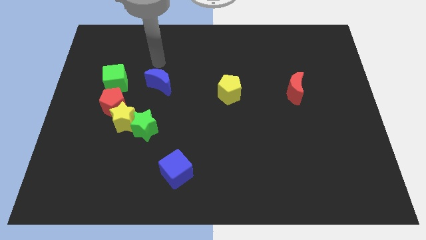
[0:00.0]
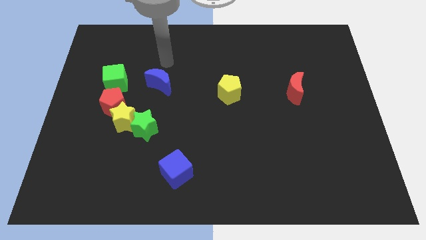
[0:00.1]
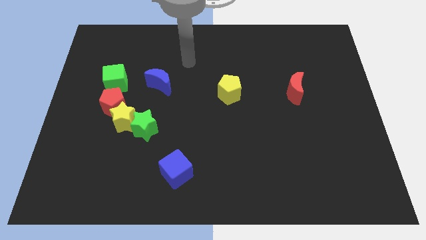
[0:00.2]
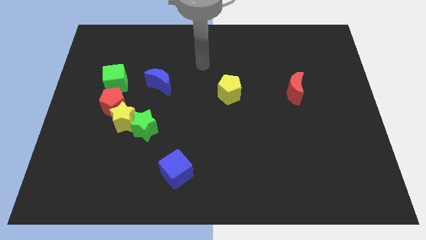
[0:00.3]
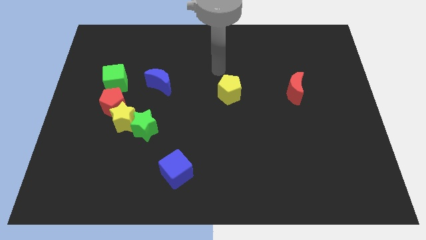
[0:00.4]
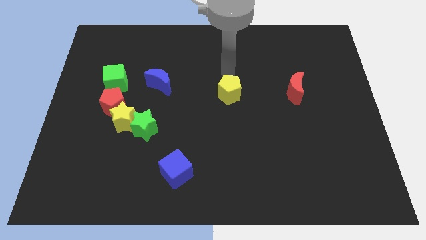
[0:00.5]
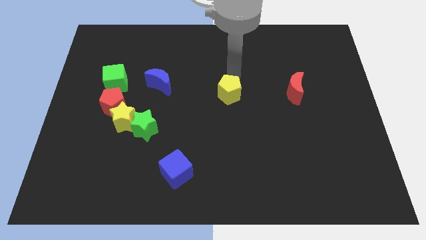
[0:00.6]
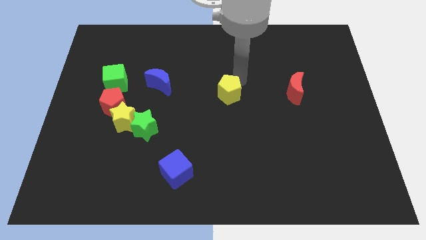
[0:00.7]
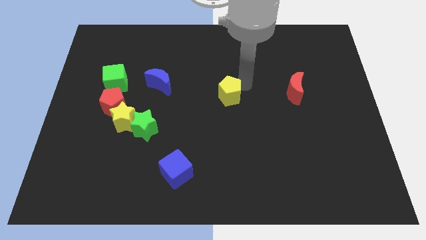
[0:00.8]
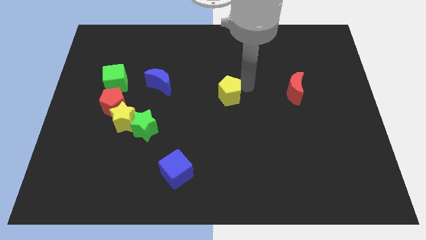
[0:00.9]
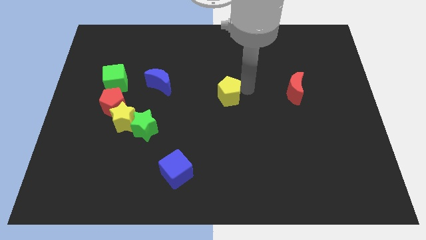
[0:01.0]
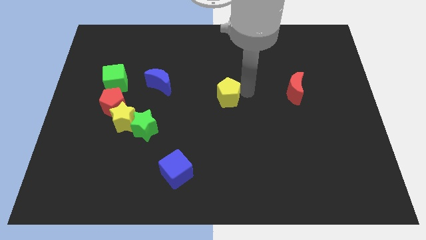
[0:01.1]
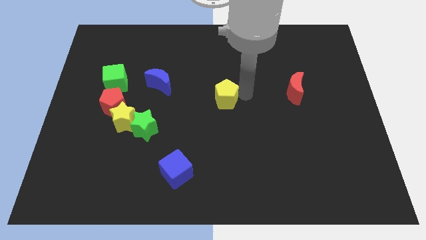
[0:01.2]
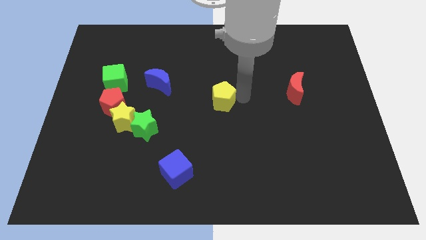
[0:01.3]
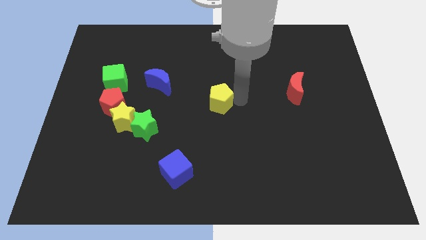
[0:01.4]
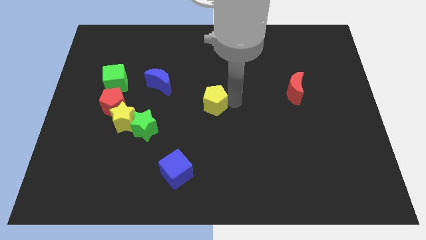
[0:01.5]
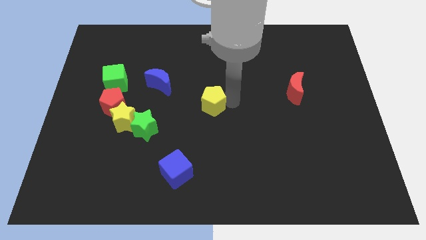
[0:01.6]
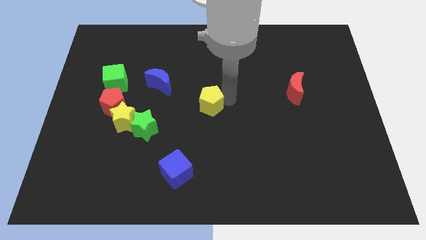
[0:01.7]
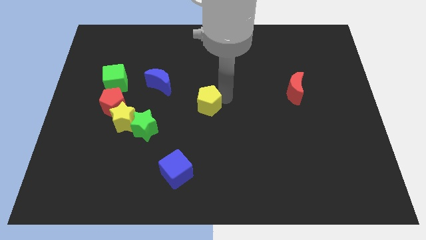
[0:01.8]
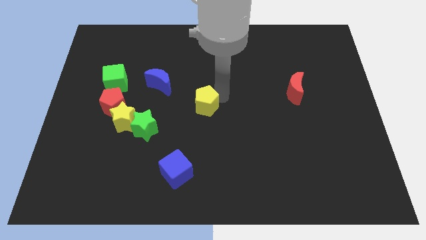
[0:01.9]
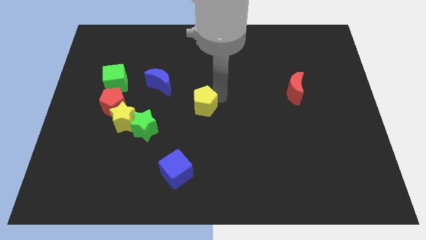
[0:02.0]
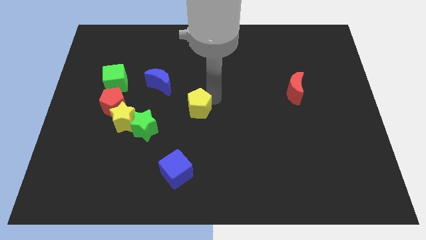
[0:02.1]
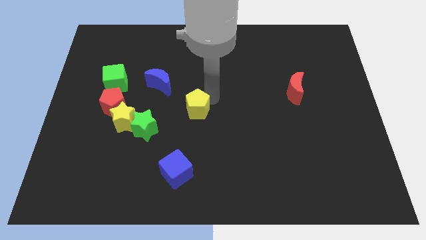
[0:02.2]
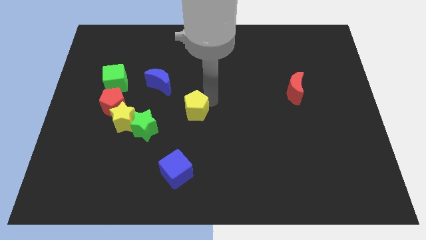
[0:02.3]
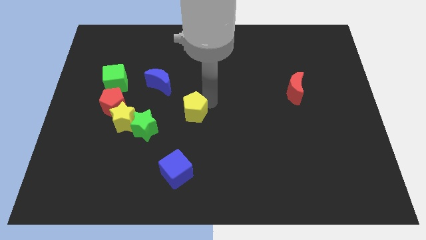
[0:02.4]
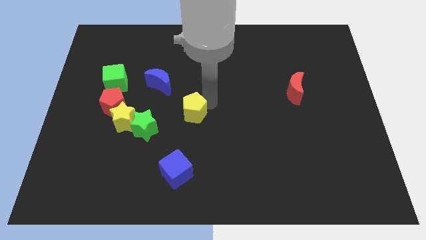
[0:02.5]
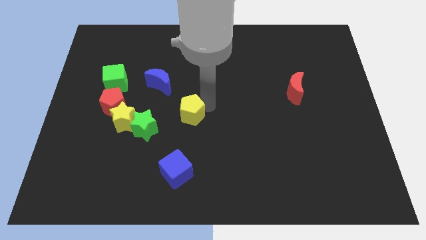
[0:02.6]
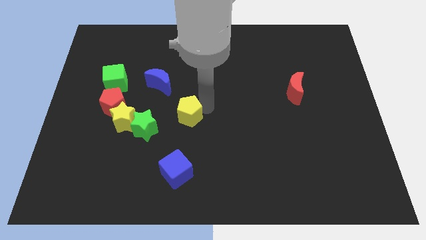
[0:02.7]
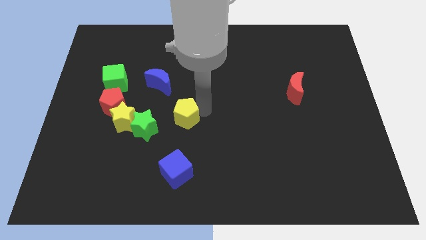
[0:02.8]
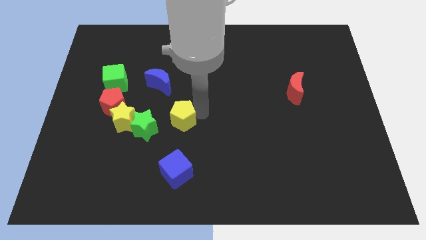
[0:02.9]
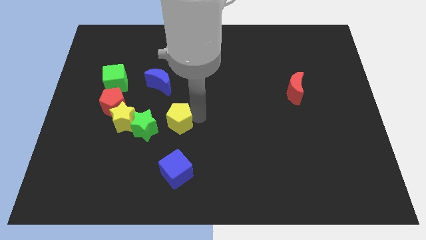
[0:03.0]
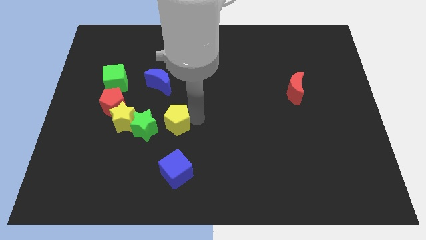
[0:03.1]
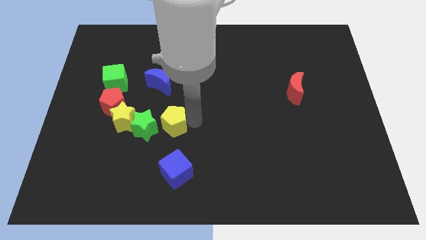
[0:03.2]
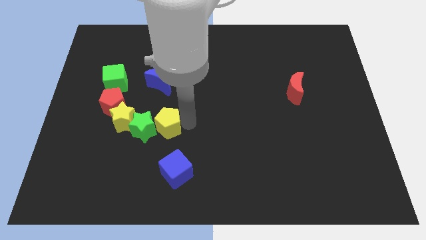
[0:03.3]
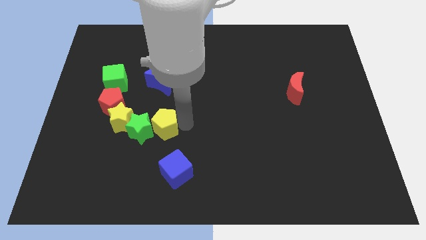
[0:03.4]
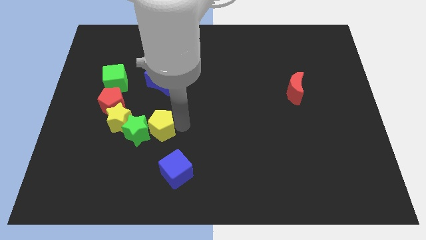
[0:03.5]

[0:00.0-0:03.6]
push the yellow pentagon close to the green star

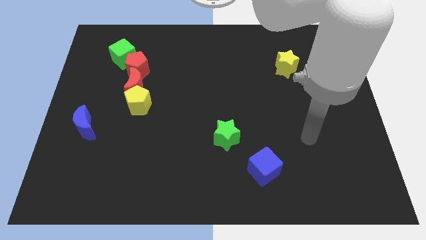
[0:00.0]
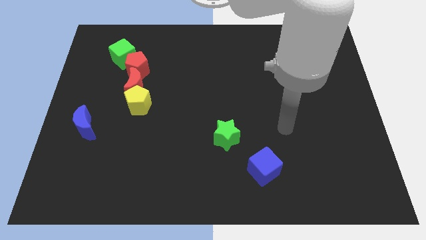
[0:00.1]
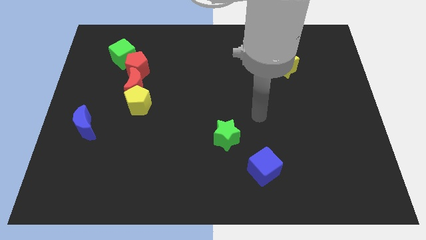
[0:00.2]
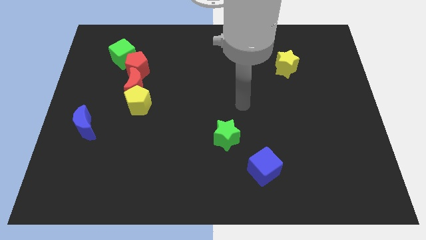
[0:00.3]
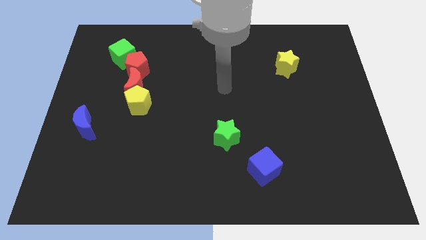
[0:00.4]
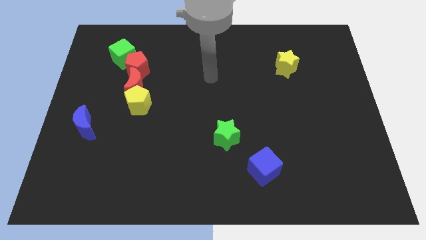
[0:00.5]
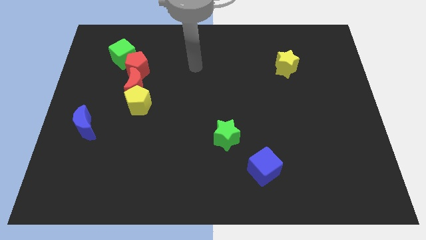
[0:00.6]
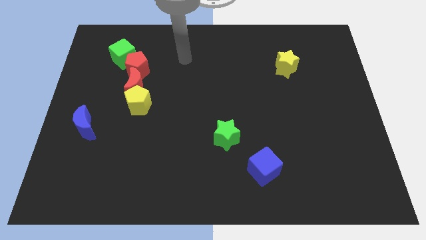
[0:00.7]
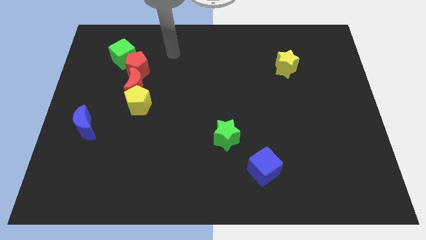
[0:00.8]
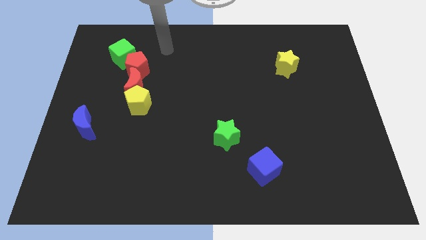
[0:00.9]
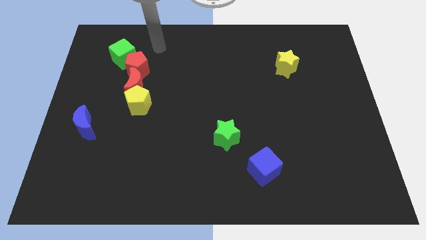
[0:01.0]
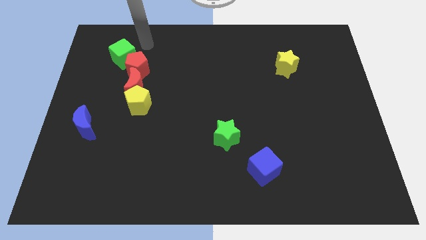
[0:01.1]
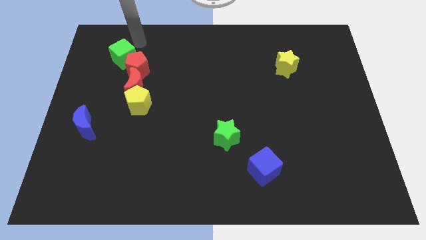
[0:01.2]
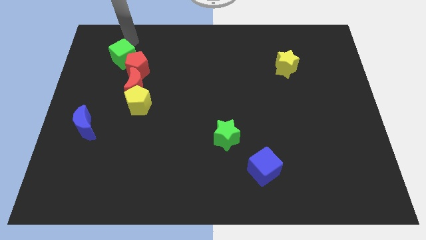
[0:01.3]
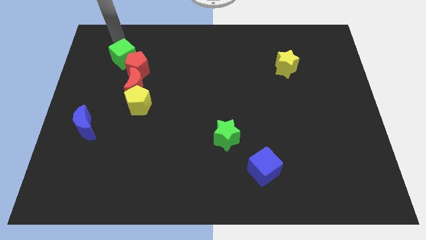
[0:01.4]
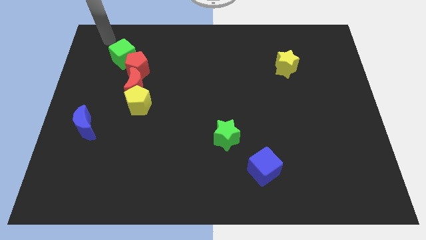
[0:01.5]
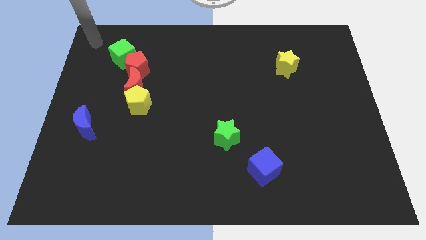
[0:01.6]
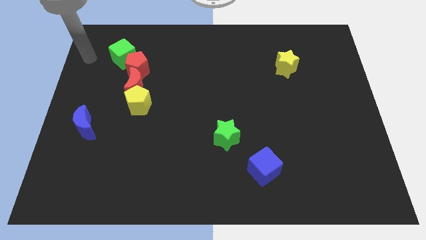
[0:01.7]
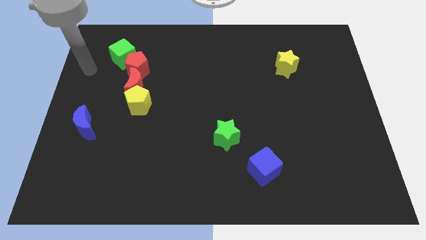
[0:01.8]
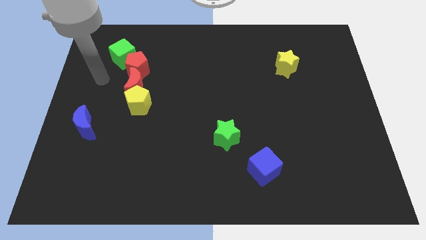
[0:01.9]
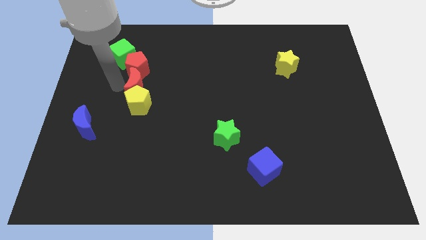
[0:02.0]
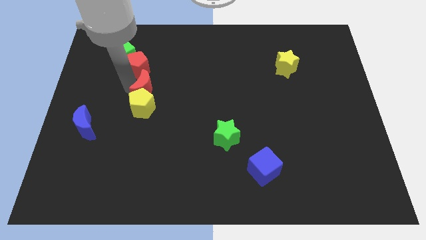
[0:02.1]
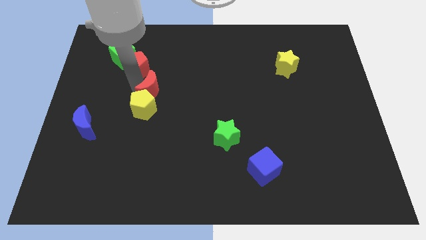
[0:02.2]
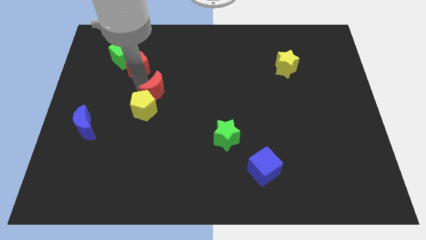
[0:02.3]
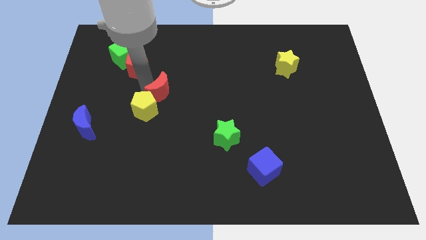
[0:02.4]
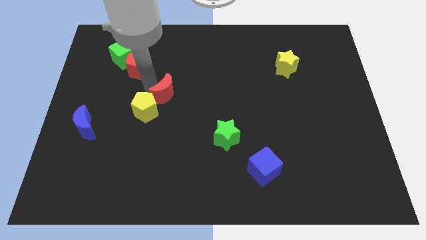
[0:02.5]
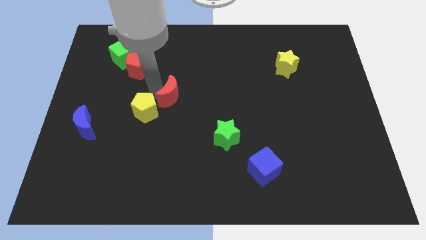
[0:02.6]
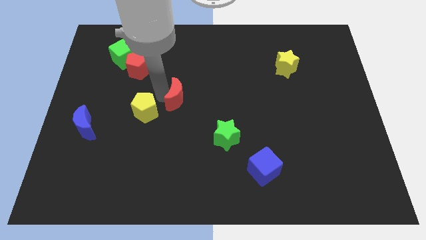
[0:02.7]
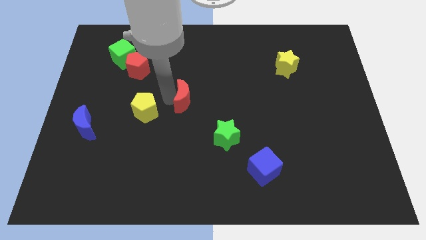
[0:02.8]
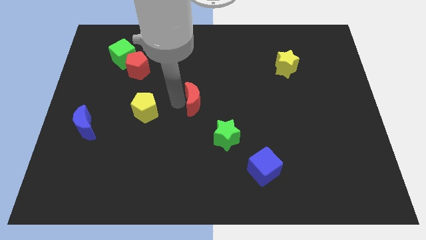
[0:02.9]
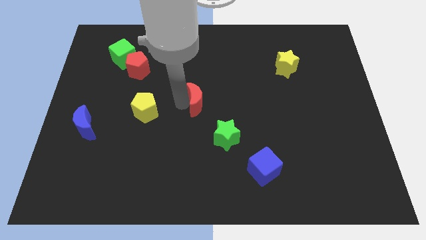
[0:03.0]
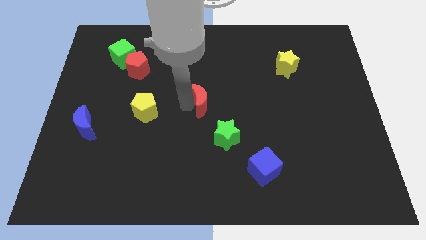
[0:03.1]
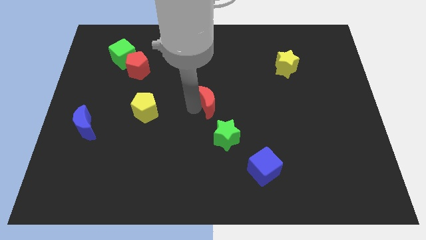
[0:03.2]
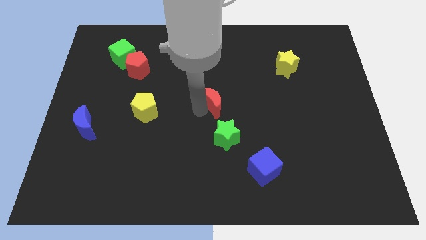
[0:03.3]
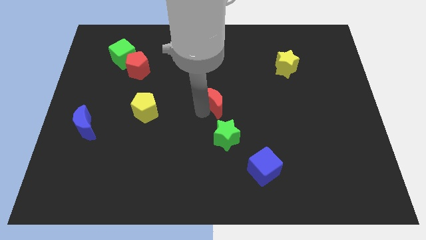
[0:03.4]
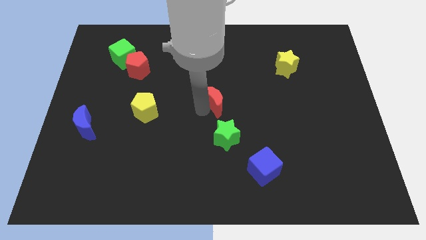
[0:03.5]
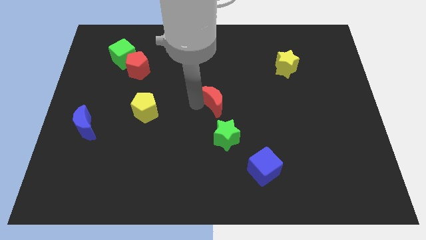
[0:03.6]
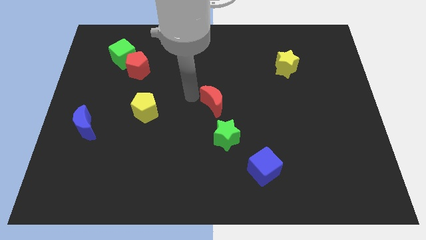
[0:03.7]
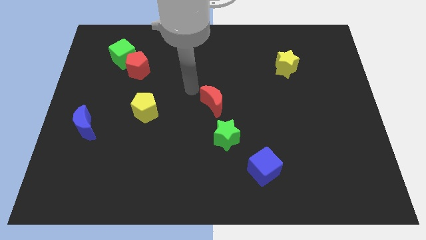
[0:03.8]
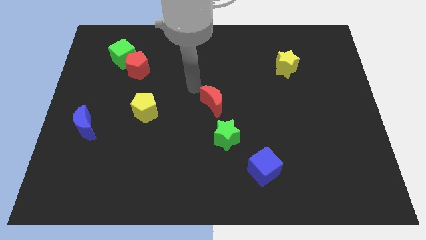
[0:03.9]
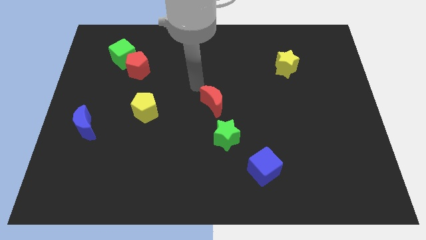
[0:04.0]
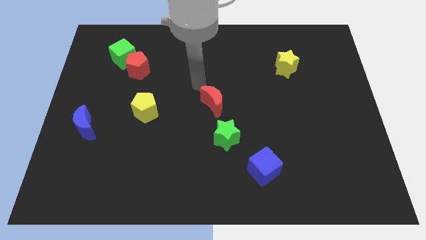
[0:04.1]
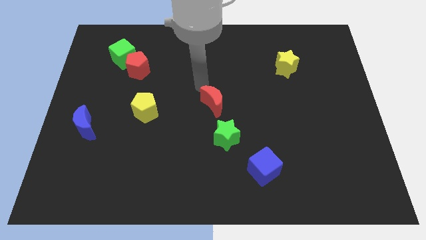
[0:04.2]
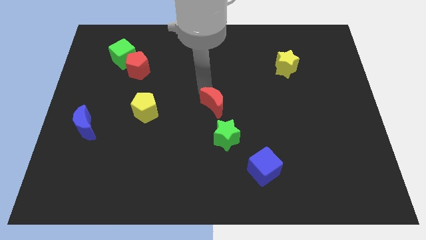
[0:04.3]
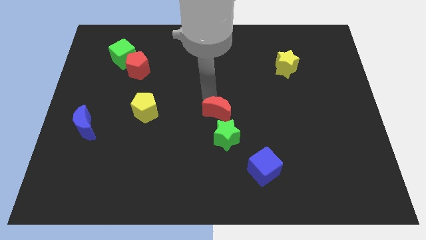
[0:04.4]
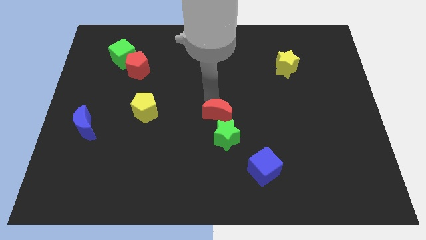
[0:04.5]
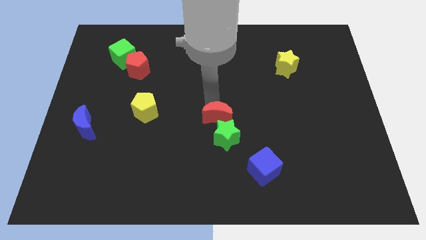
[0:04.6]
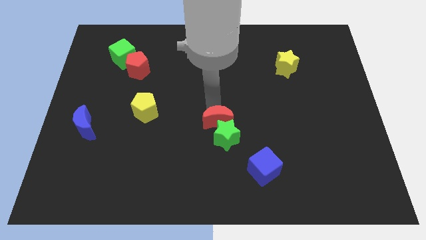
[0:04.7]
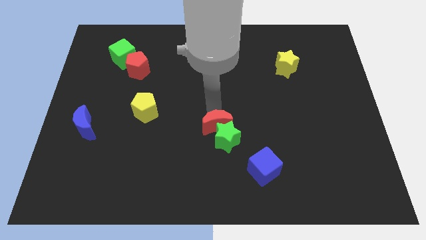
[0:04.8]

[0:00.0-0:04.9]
move the red moon close to the green star
